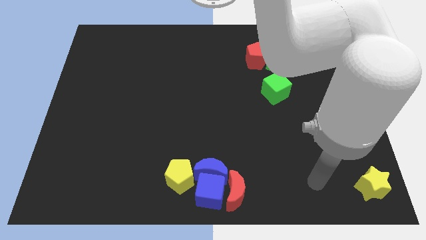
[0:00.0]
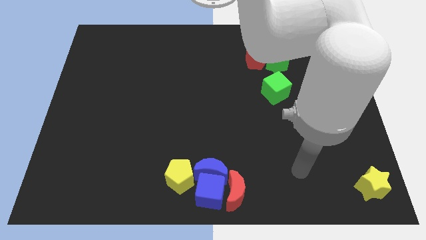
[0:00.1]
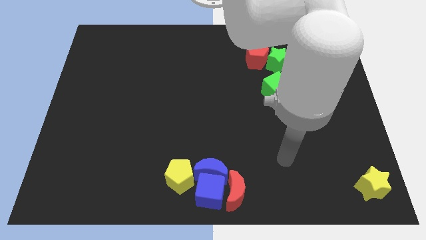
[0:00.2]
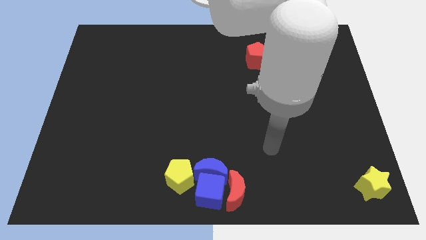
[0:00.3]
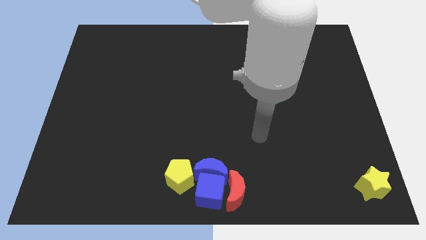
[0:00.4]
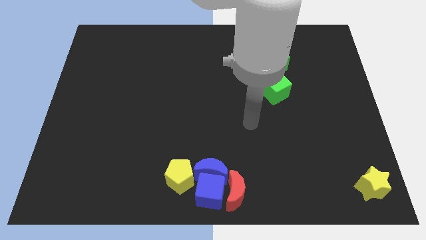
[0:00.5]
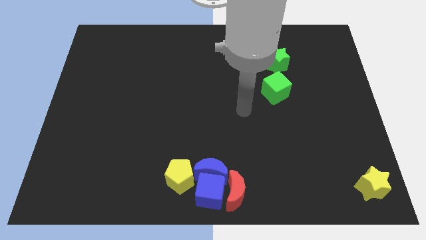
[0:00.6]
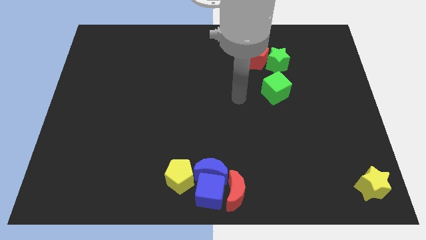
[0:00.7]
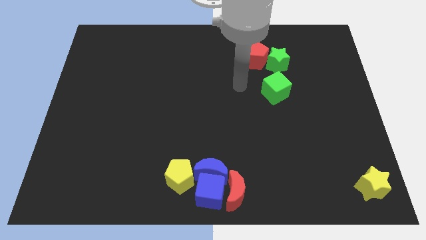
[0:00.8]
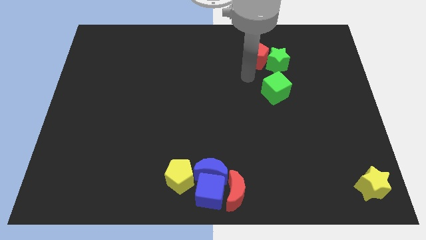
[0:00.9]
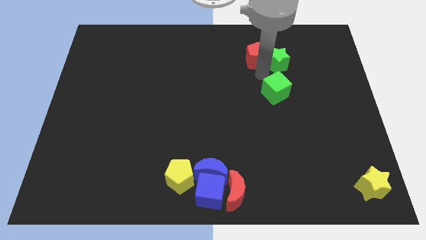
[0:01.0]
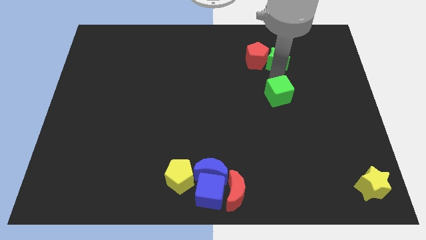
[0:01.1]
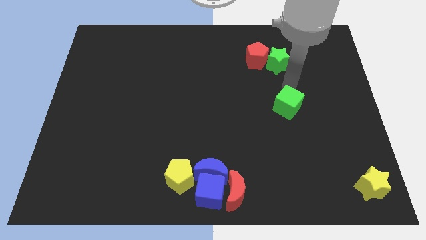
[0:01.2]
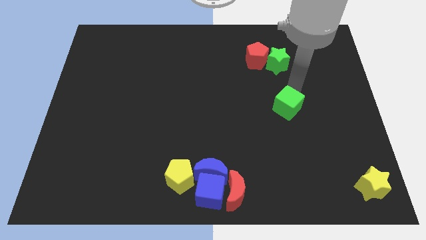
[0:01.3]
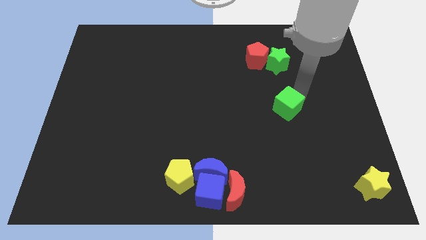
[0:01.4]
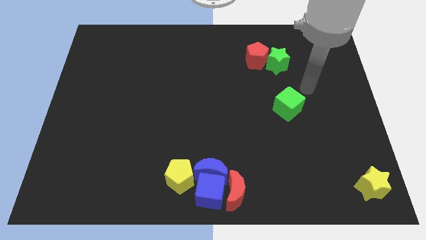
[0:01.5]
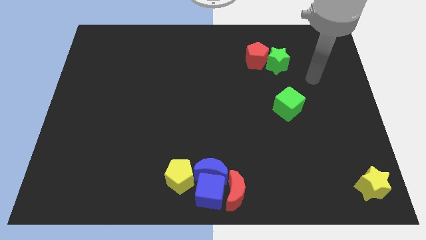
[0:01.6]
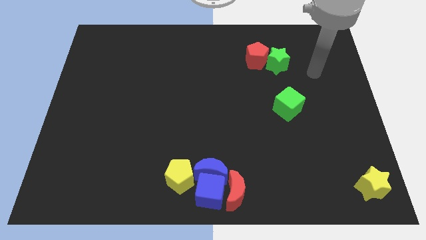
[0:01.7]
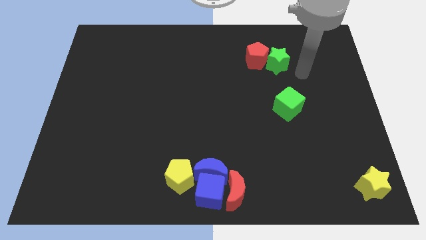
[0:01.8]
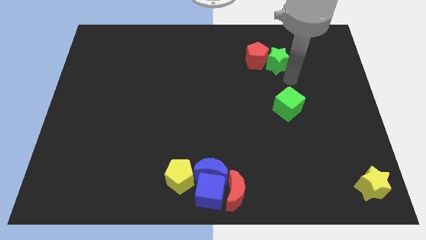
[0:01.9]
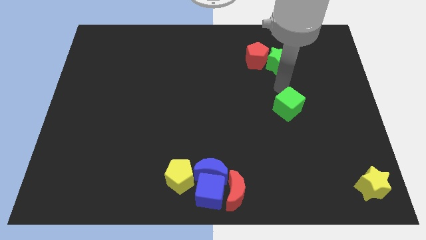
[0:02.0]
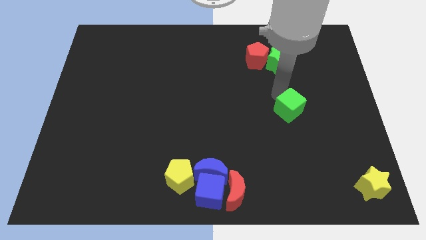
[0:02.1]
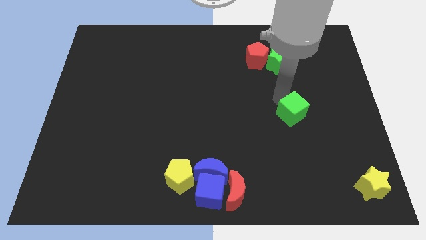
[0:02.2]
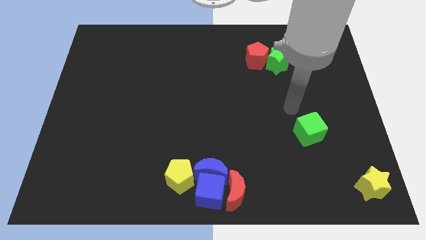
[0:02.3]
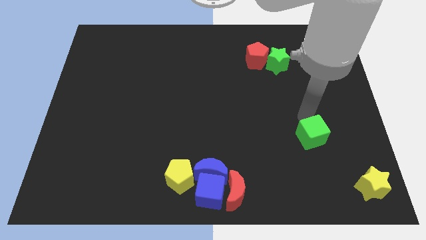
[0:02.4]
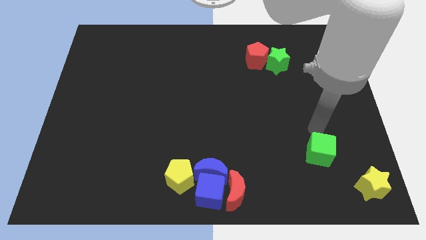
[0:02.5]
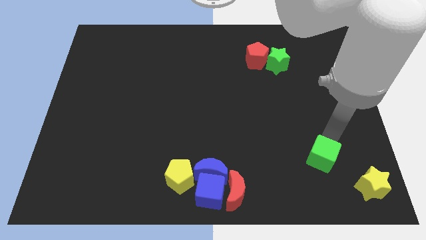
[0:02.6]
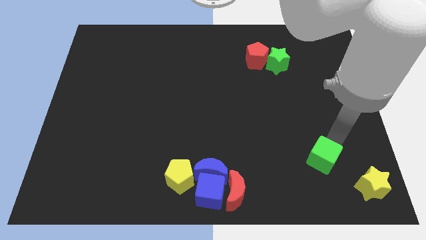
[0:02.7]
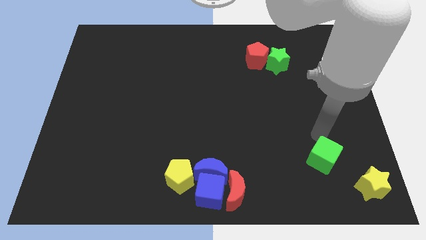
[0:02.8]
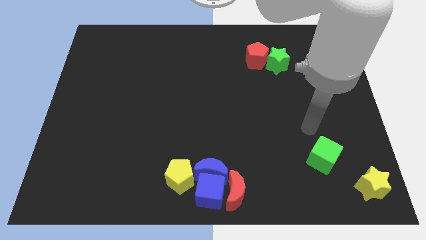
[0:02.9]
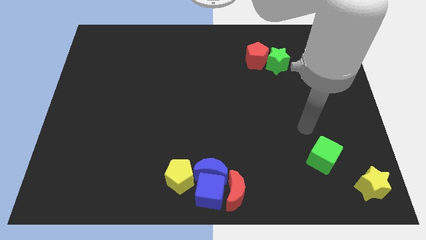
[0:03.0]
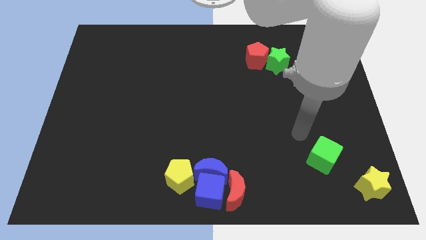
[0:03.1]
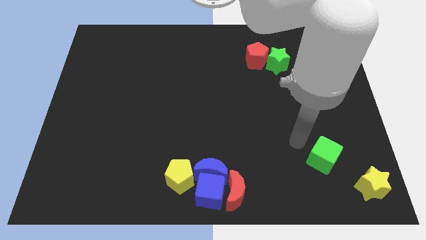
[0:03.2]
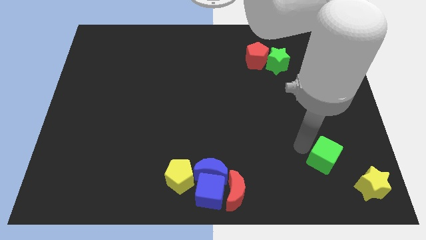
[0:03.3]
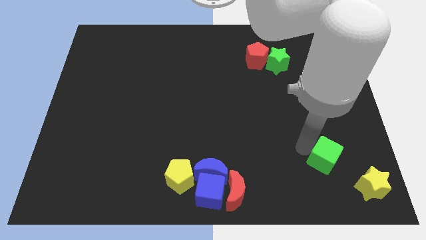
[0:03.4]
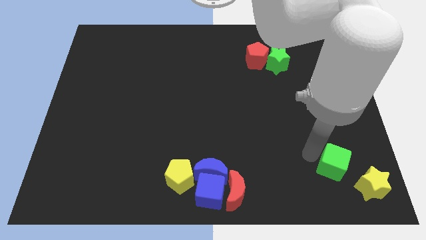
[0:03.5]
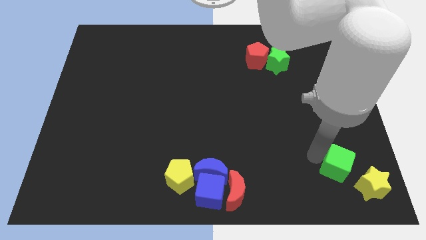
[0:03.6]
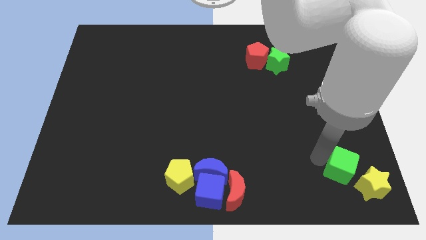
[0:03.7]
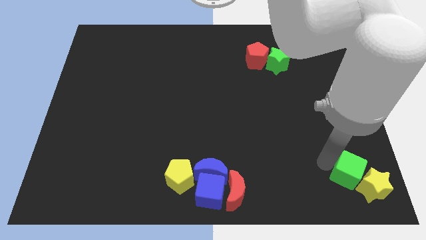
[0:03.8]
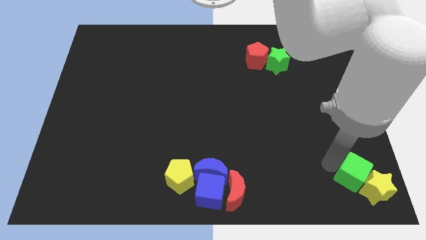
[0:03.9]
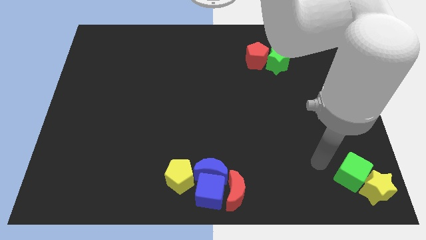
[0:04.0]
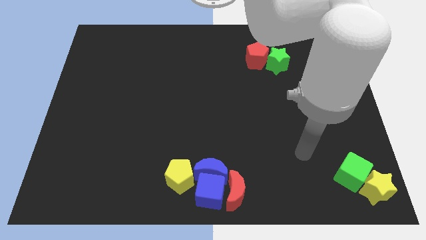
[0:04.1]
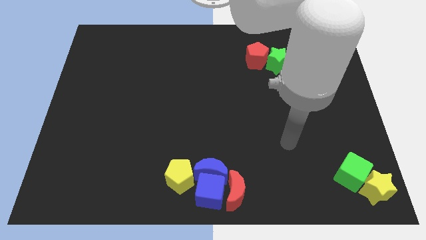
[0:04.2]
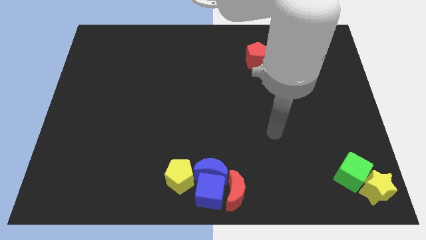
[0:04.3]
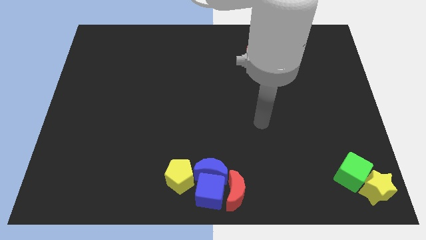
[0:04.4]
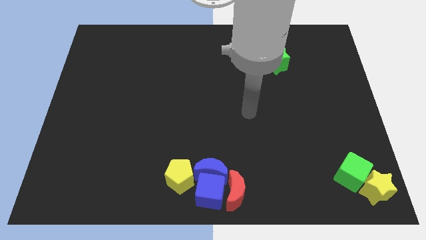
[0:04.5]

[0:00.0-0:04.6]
push the green cube into the yellow star

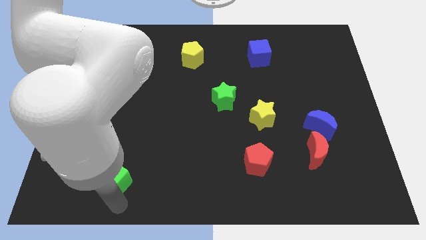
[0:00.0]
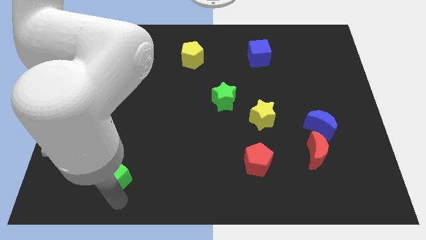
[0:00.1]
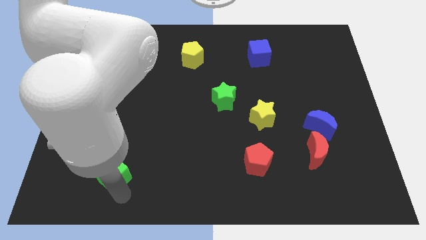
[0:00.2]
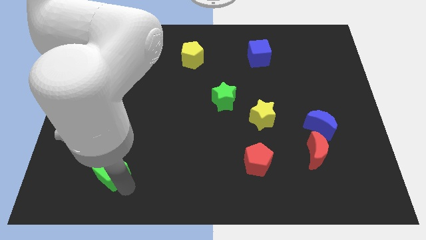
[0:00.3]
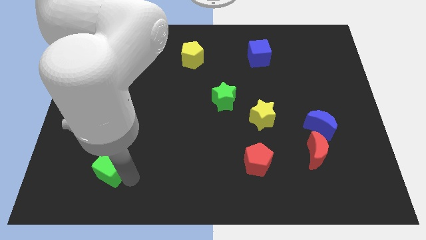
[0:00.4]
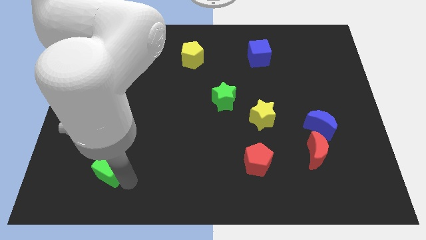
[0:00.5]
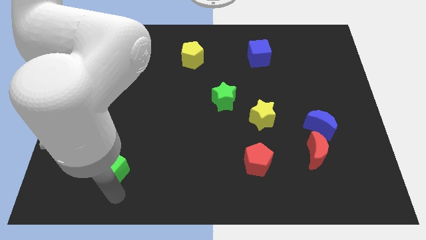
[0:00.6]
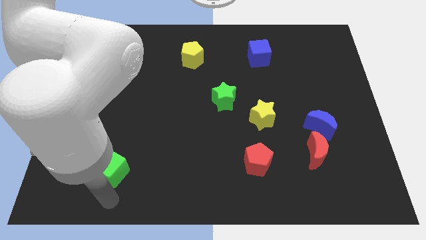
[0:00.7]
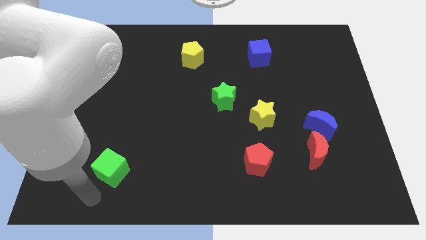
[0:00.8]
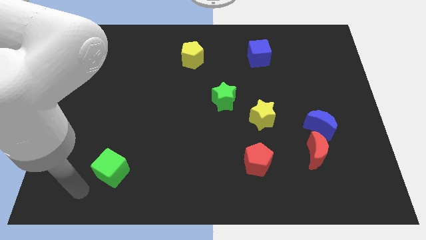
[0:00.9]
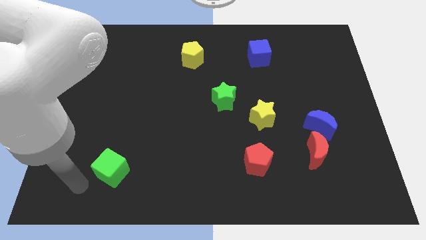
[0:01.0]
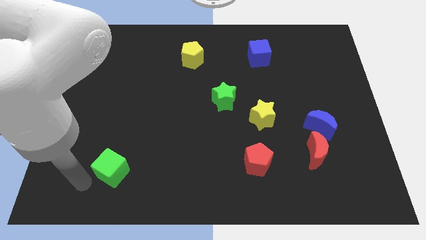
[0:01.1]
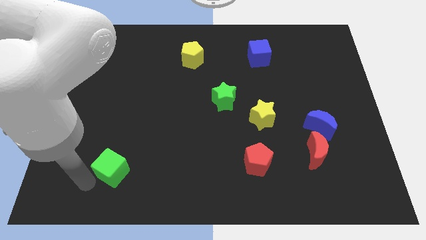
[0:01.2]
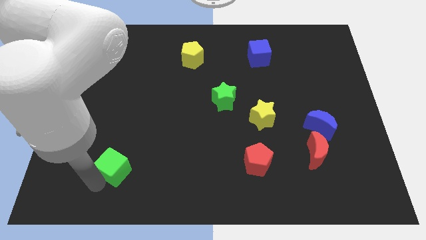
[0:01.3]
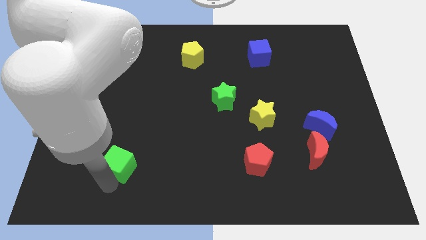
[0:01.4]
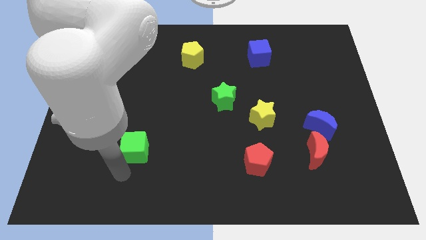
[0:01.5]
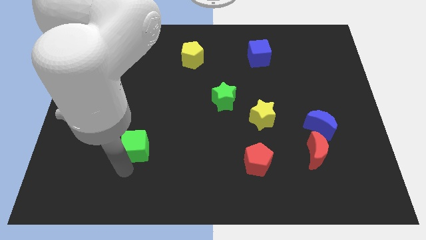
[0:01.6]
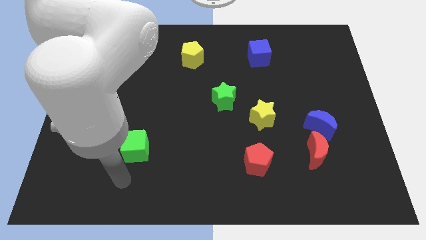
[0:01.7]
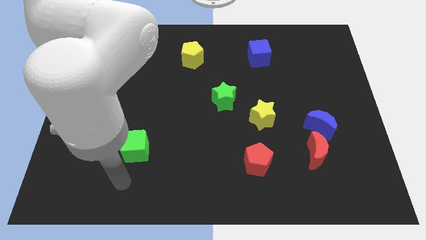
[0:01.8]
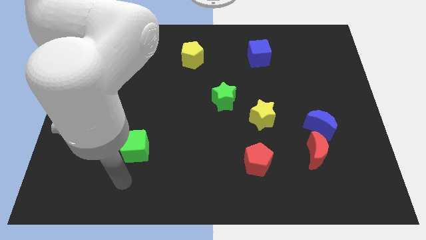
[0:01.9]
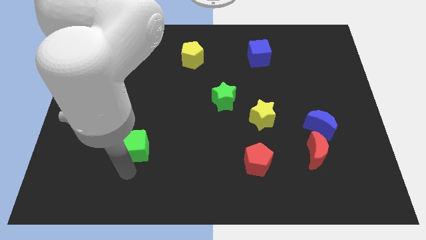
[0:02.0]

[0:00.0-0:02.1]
move the green cube upward

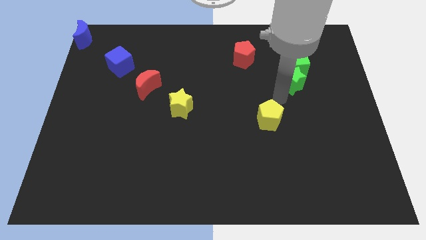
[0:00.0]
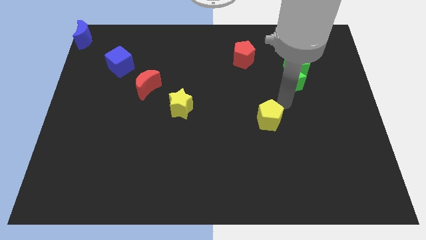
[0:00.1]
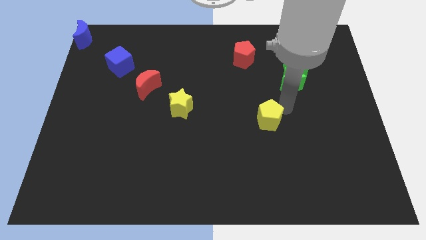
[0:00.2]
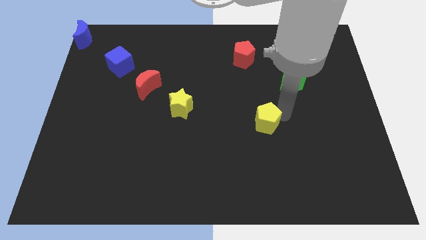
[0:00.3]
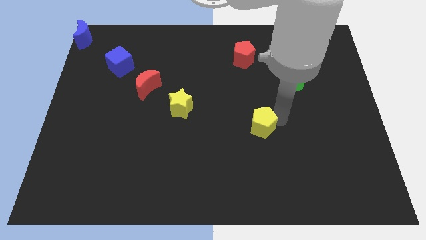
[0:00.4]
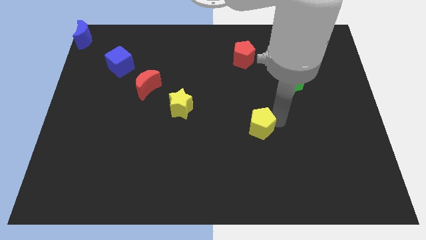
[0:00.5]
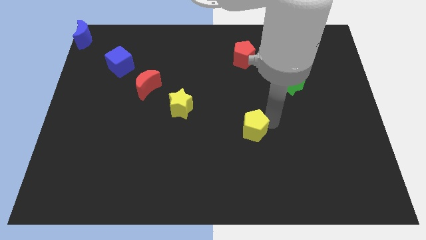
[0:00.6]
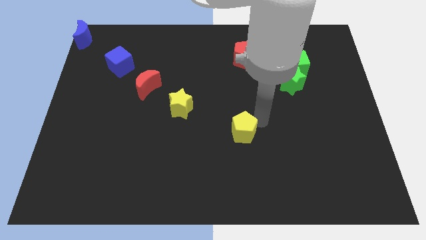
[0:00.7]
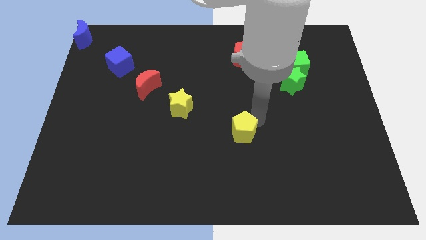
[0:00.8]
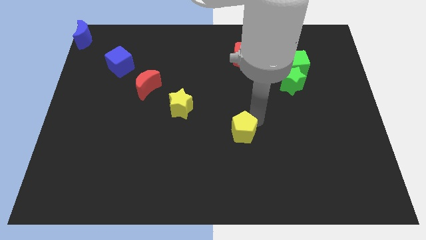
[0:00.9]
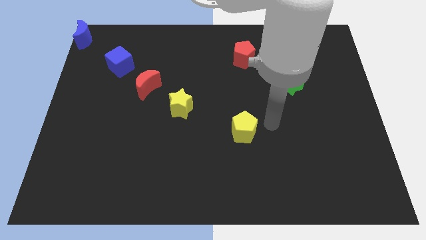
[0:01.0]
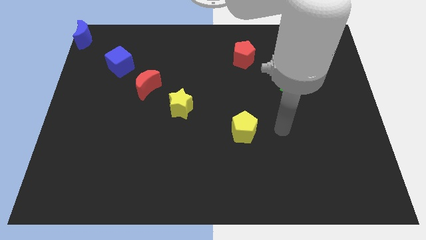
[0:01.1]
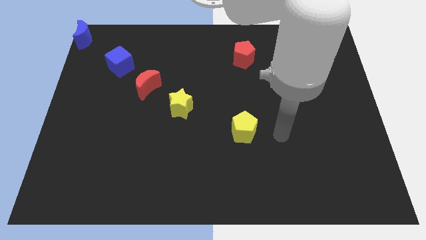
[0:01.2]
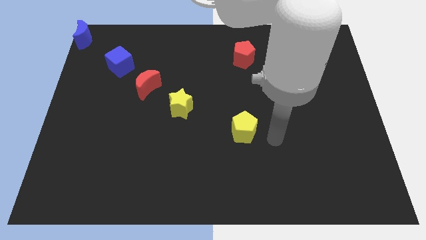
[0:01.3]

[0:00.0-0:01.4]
move the yellow pentagon to the bottom of the red pentagon

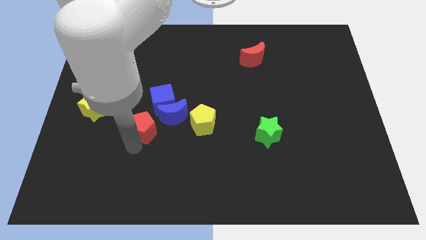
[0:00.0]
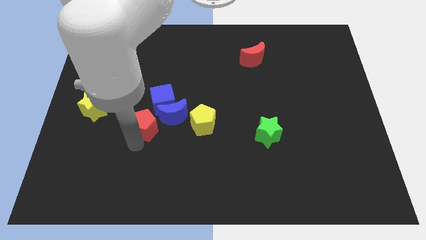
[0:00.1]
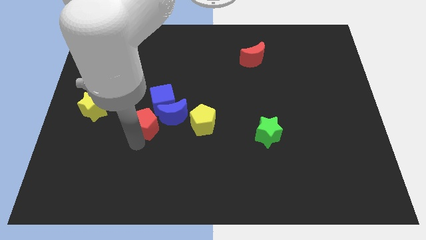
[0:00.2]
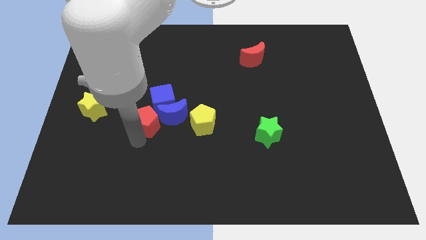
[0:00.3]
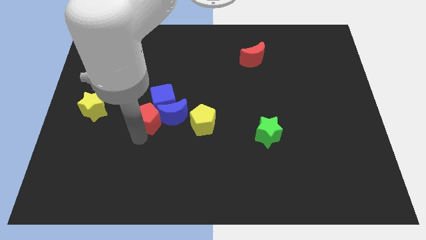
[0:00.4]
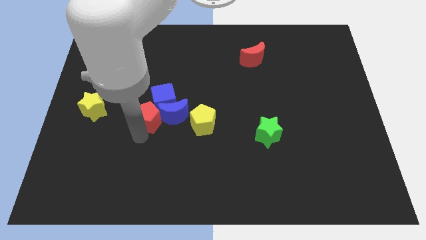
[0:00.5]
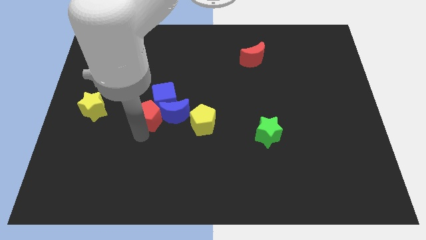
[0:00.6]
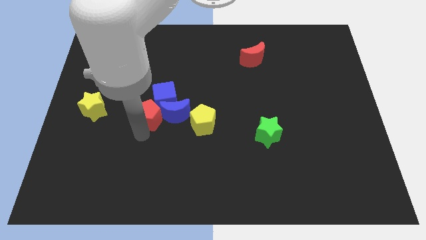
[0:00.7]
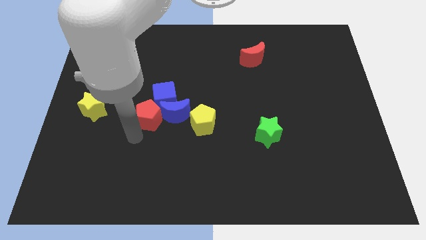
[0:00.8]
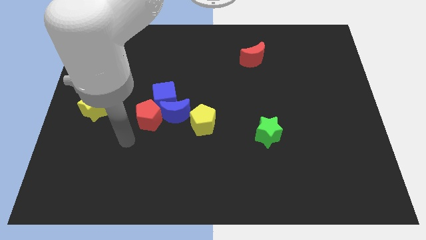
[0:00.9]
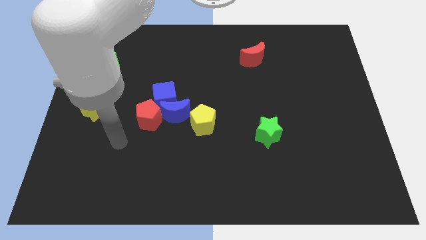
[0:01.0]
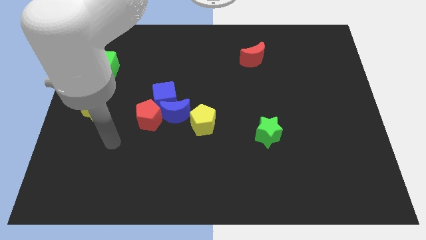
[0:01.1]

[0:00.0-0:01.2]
move the red pentagon into blue blocks
